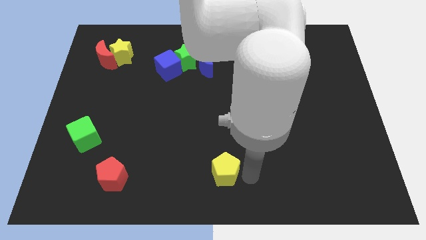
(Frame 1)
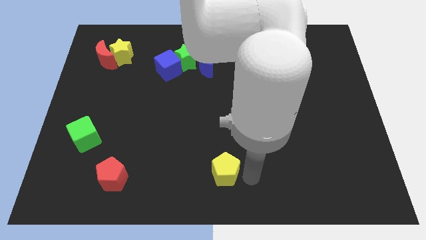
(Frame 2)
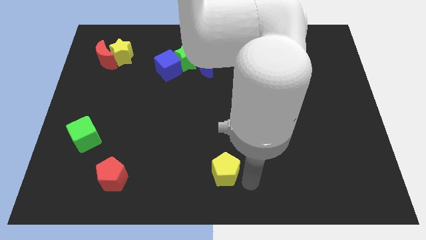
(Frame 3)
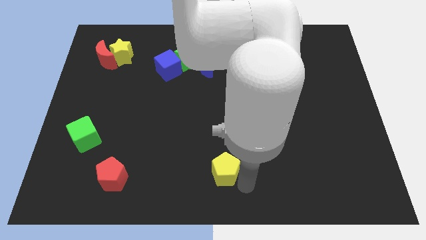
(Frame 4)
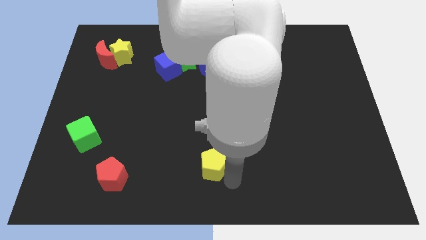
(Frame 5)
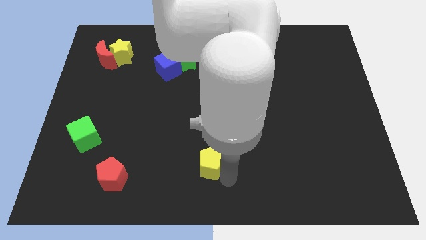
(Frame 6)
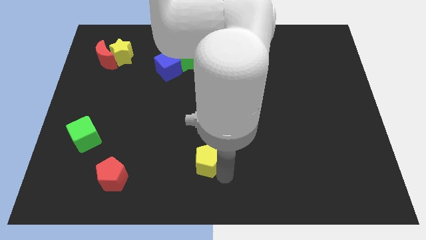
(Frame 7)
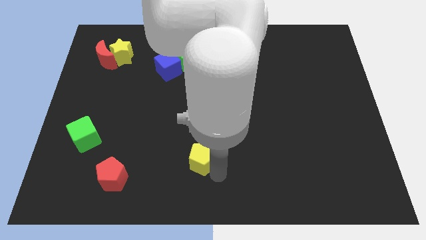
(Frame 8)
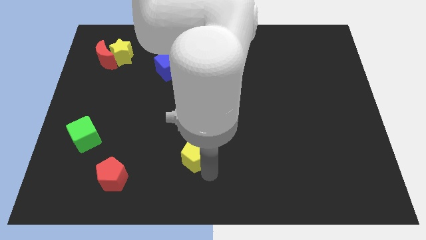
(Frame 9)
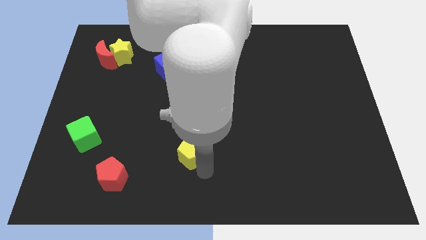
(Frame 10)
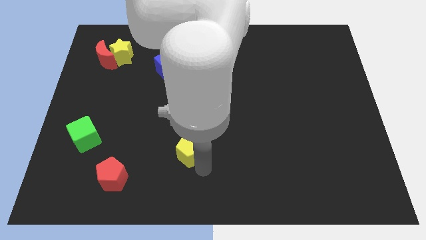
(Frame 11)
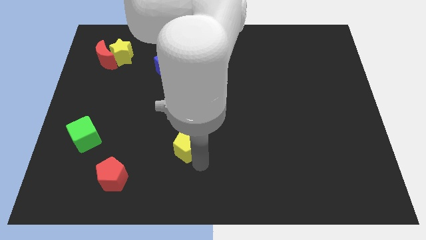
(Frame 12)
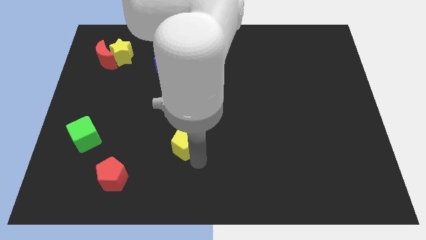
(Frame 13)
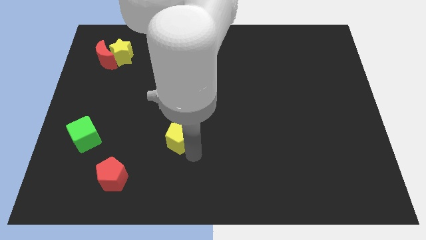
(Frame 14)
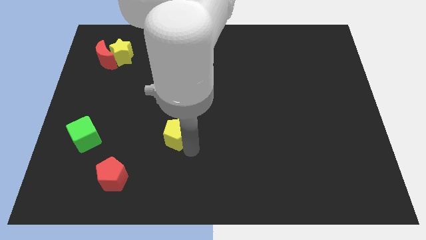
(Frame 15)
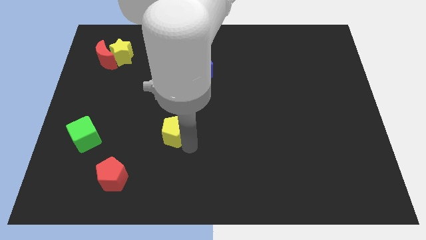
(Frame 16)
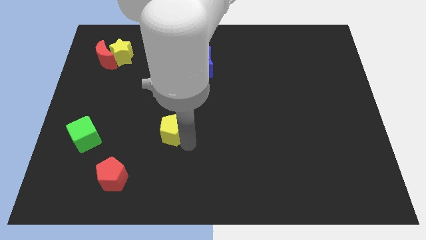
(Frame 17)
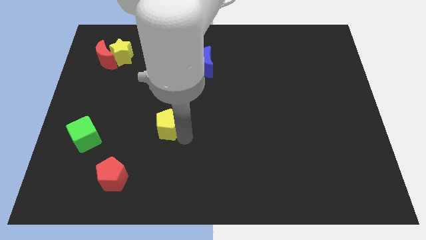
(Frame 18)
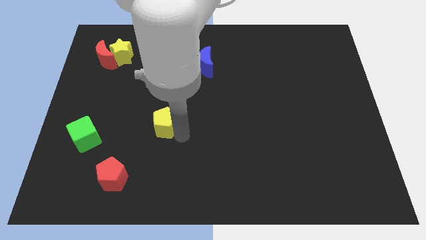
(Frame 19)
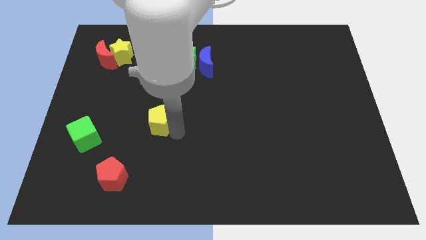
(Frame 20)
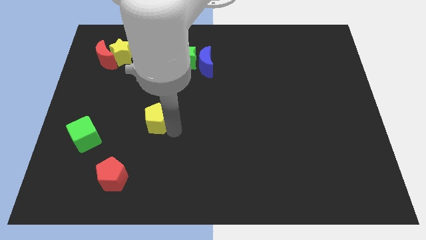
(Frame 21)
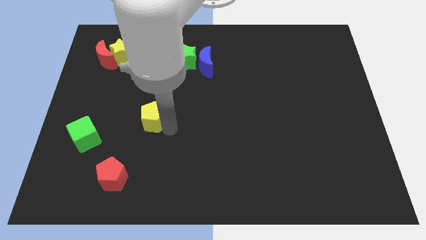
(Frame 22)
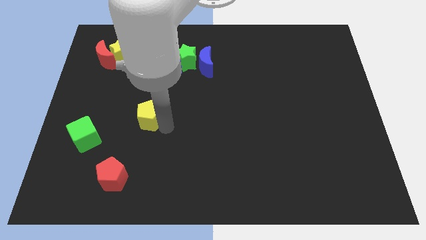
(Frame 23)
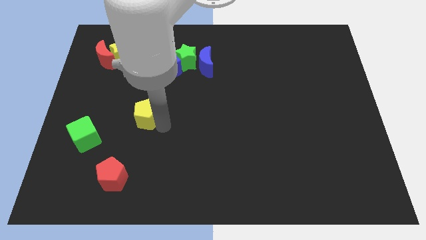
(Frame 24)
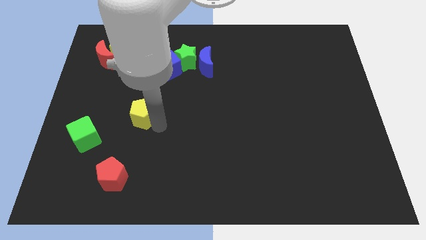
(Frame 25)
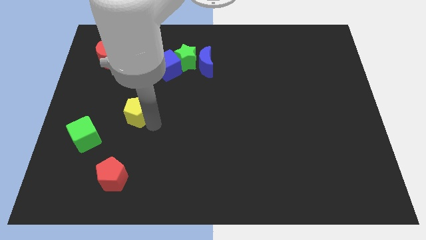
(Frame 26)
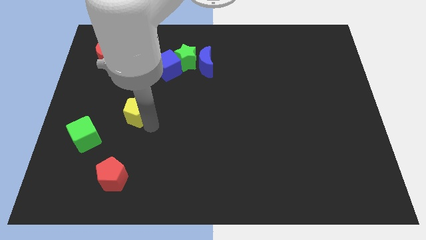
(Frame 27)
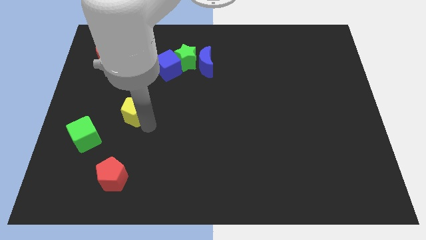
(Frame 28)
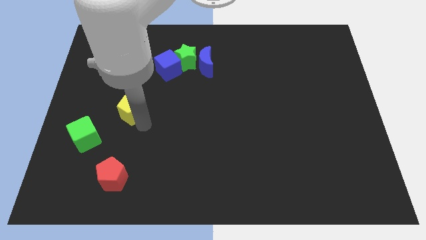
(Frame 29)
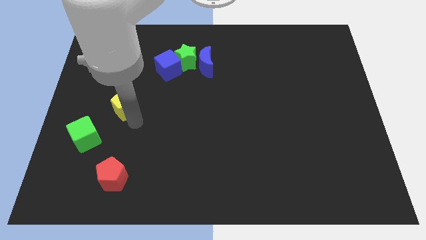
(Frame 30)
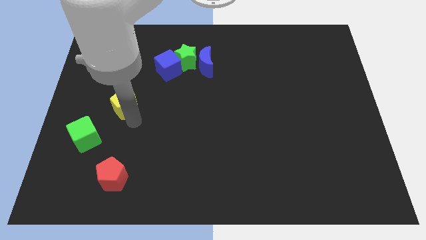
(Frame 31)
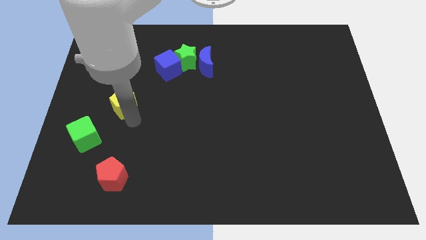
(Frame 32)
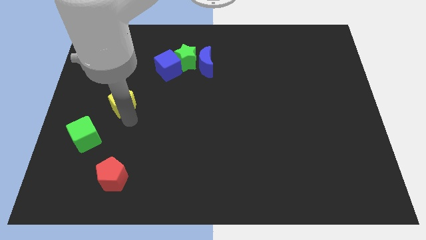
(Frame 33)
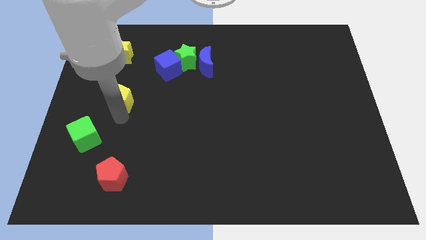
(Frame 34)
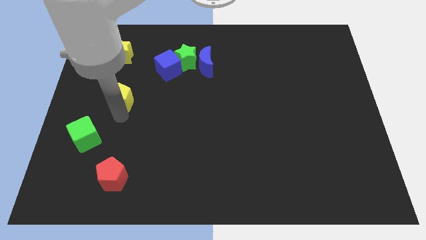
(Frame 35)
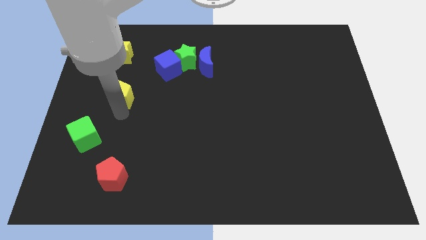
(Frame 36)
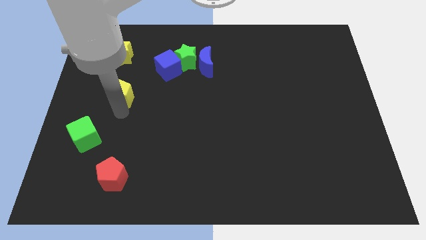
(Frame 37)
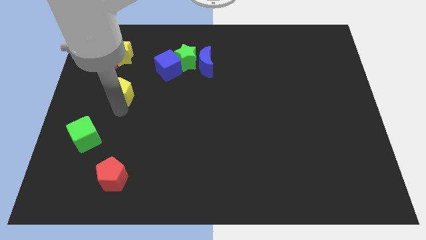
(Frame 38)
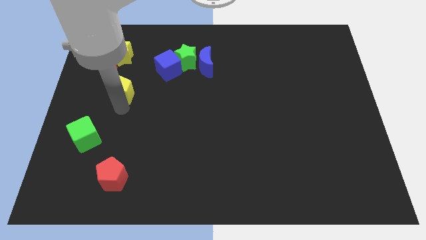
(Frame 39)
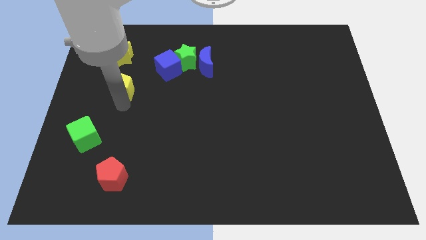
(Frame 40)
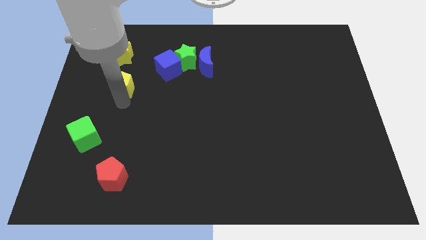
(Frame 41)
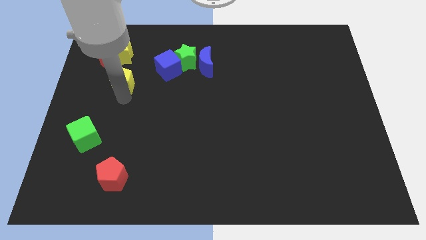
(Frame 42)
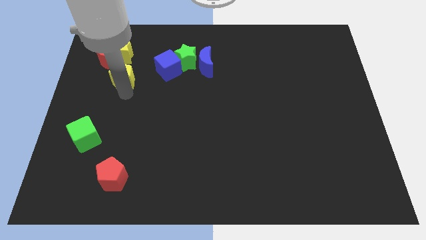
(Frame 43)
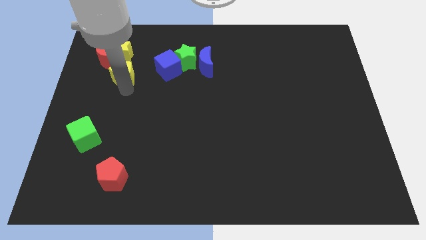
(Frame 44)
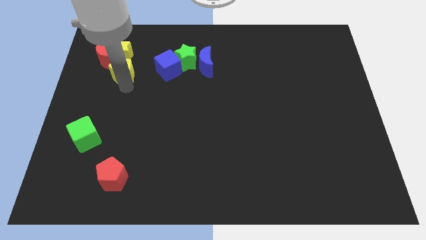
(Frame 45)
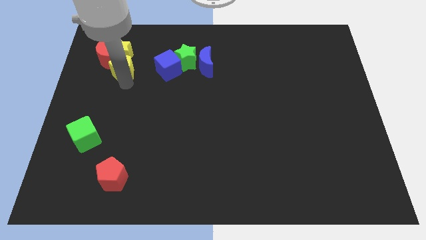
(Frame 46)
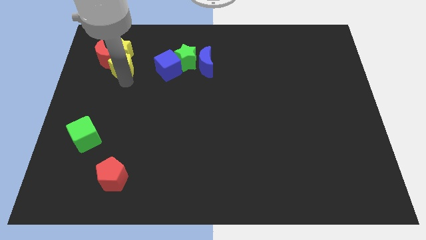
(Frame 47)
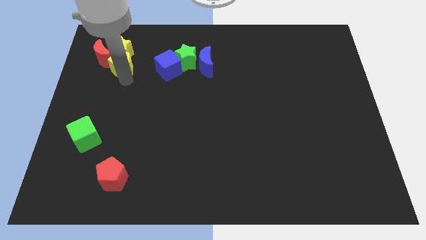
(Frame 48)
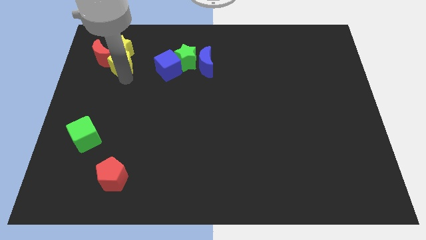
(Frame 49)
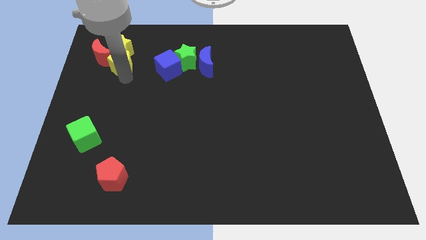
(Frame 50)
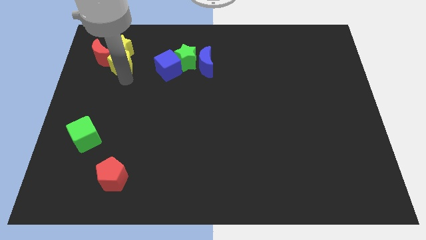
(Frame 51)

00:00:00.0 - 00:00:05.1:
push the yellow pentagon into the yellow star

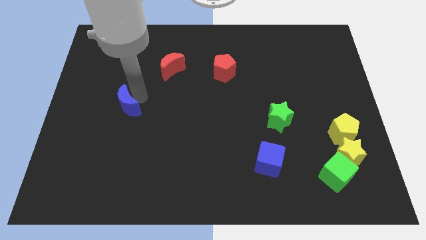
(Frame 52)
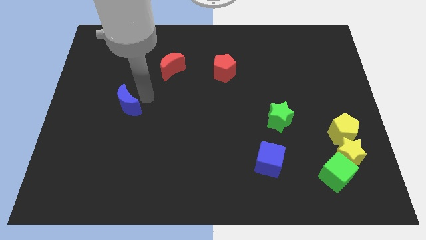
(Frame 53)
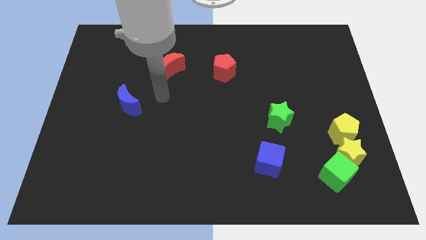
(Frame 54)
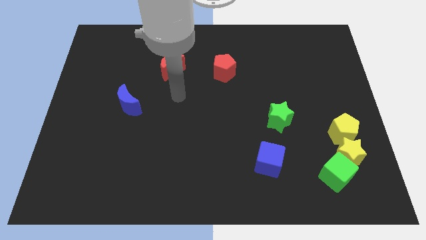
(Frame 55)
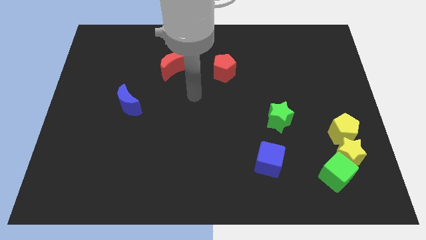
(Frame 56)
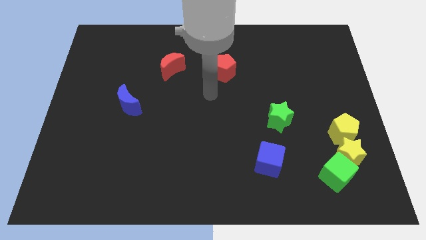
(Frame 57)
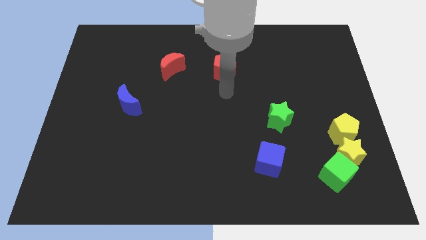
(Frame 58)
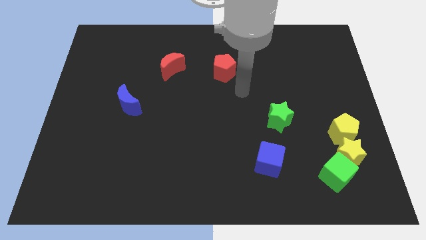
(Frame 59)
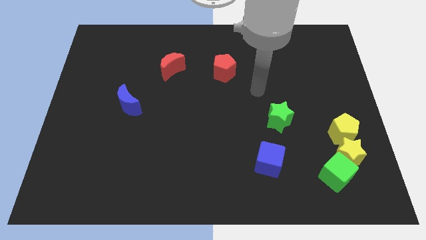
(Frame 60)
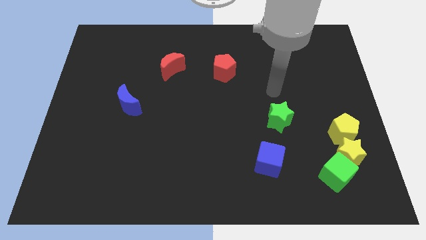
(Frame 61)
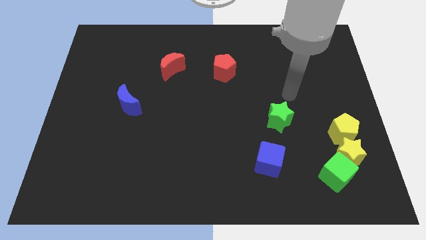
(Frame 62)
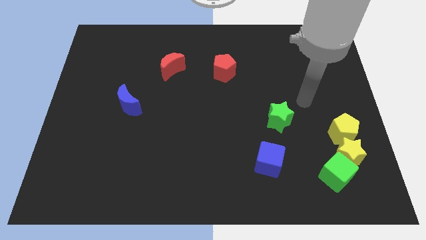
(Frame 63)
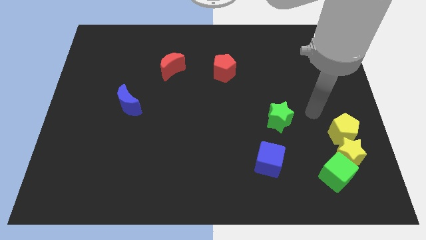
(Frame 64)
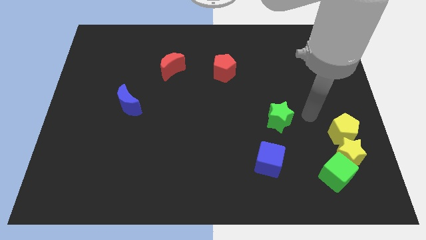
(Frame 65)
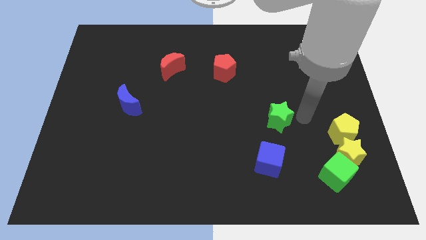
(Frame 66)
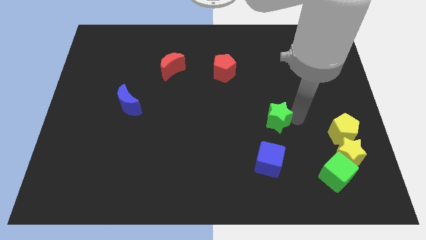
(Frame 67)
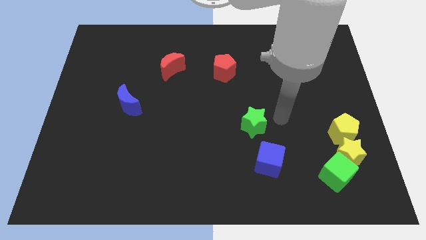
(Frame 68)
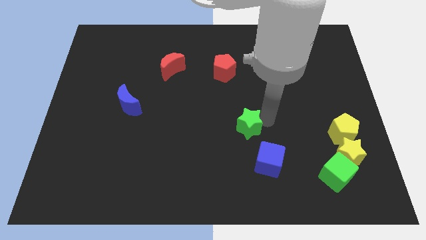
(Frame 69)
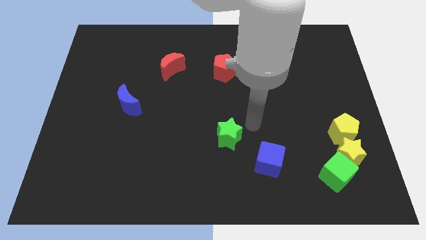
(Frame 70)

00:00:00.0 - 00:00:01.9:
push the green star to the left top of blue cube

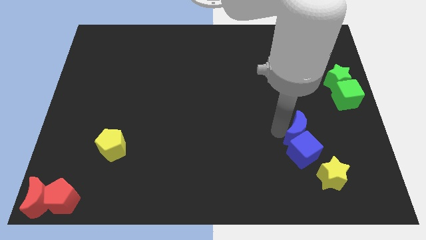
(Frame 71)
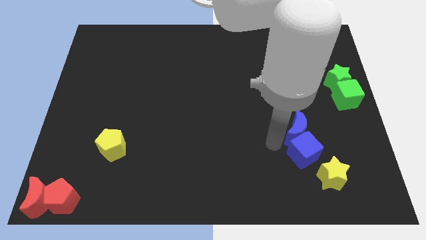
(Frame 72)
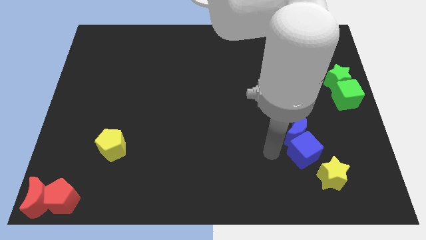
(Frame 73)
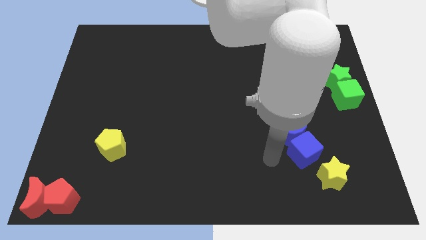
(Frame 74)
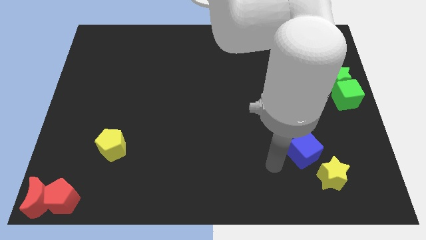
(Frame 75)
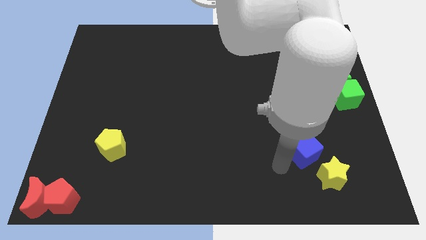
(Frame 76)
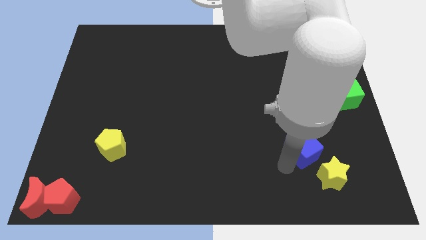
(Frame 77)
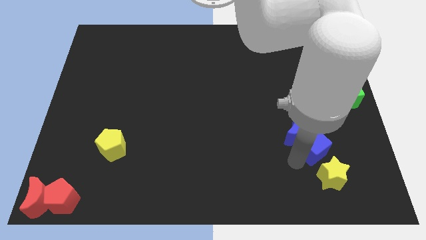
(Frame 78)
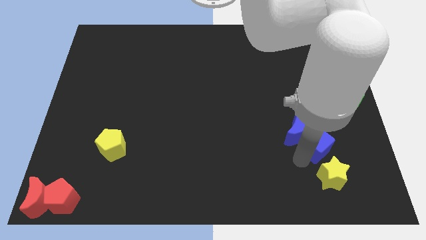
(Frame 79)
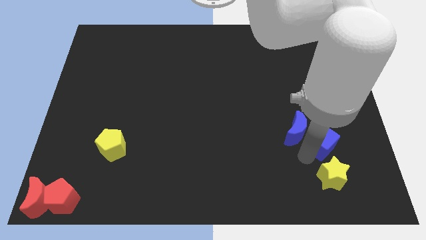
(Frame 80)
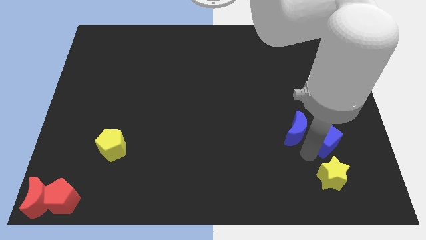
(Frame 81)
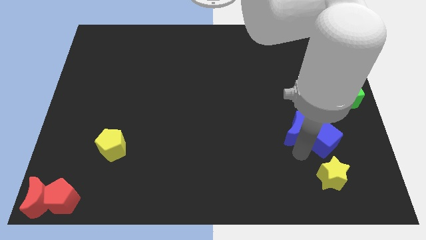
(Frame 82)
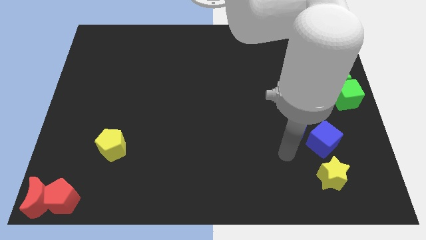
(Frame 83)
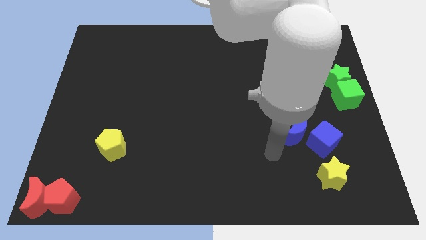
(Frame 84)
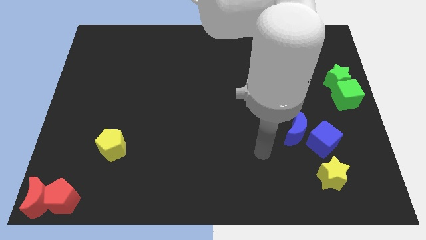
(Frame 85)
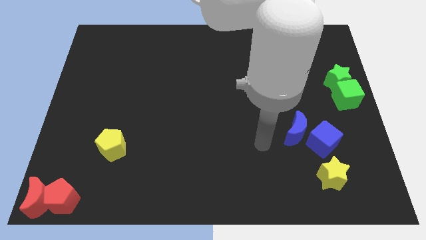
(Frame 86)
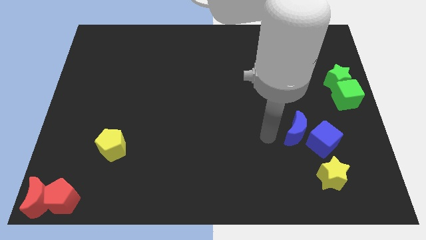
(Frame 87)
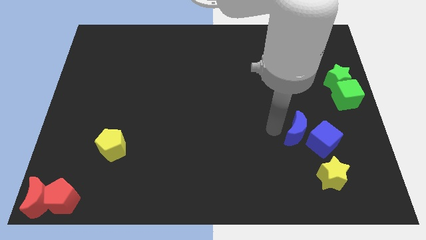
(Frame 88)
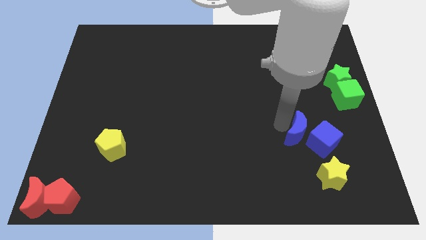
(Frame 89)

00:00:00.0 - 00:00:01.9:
put the blue cube diagonally bottom right to the blue moon
